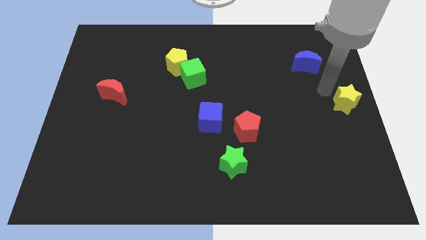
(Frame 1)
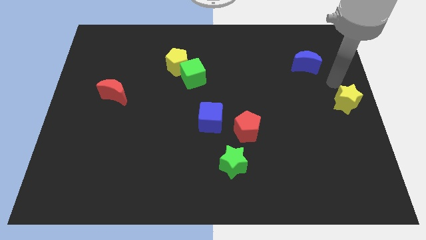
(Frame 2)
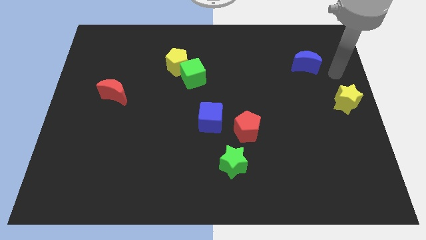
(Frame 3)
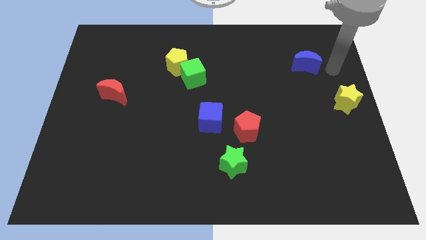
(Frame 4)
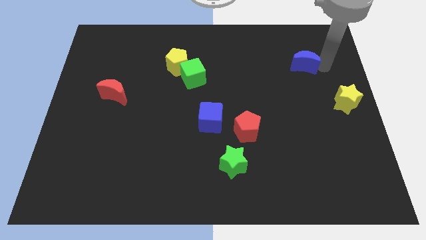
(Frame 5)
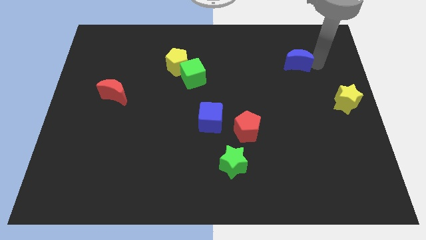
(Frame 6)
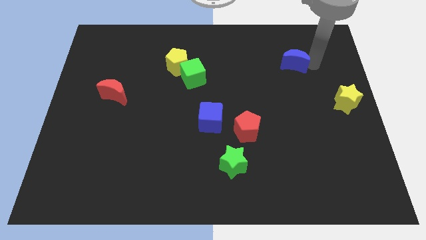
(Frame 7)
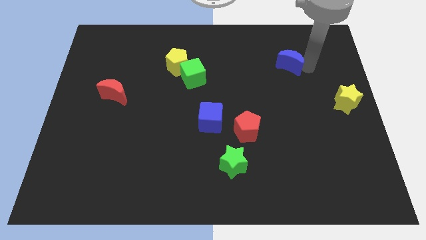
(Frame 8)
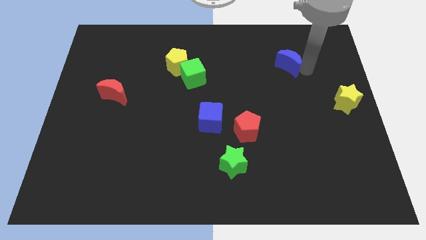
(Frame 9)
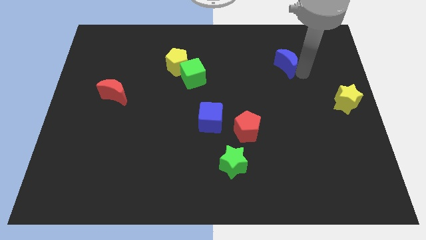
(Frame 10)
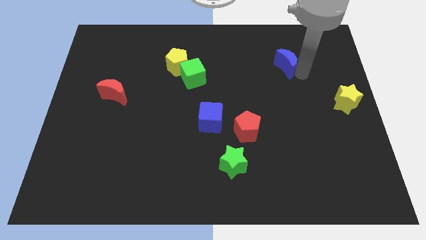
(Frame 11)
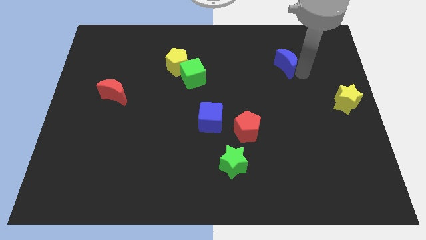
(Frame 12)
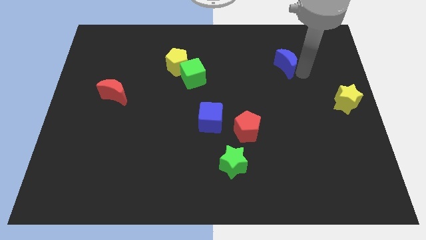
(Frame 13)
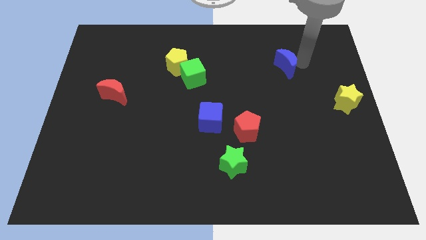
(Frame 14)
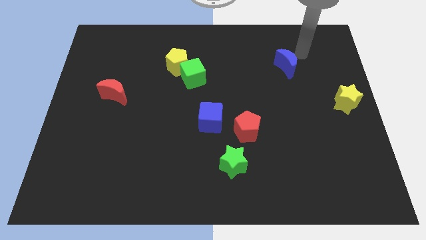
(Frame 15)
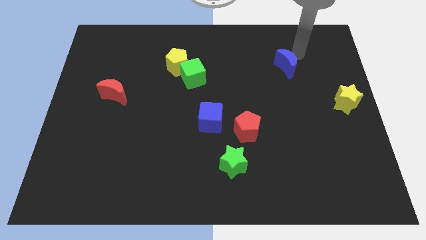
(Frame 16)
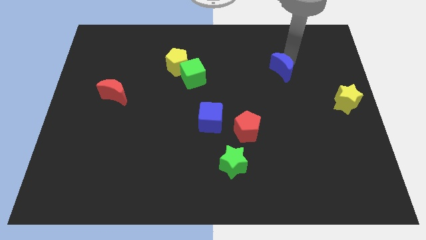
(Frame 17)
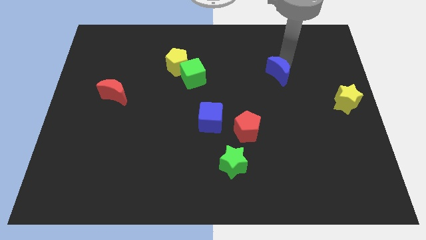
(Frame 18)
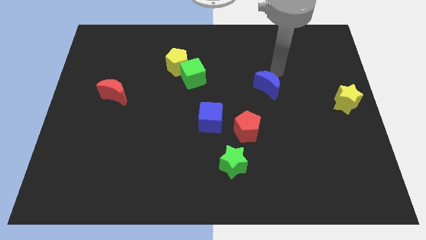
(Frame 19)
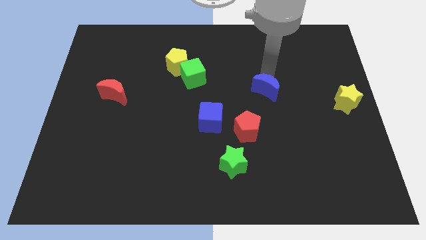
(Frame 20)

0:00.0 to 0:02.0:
push the blue moon towards the center of the board

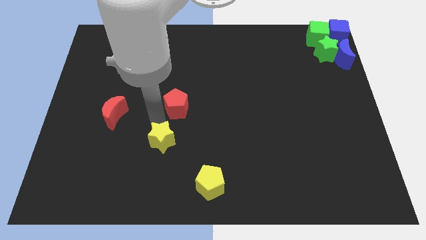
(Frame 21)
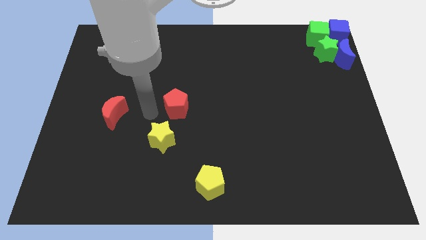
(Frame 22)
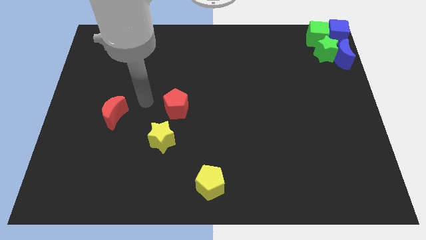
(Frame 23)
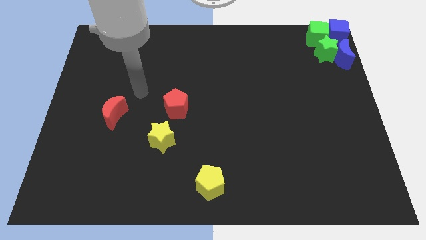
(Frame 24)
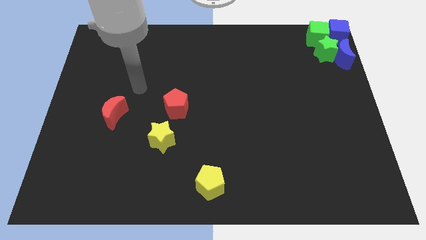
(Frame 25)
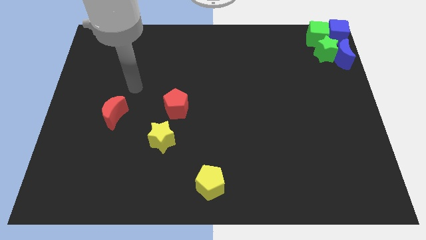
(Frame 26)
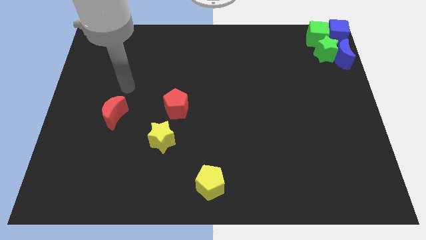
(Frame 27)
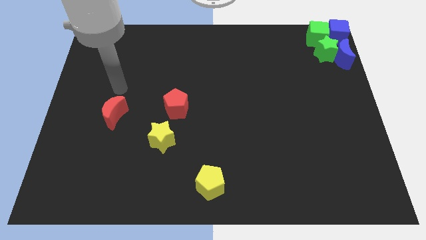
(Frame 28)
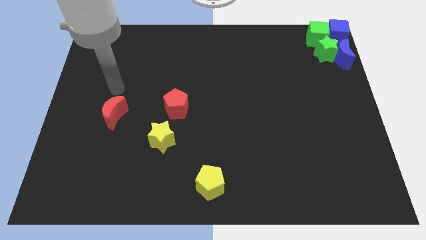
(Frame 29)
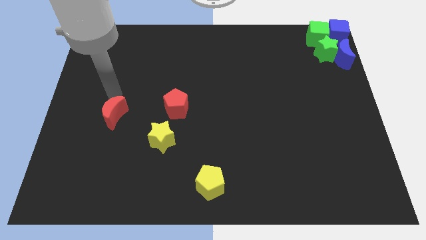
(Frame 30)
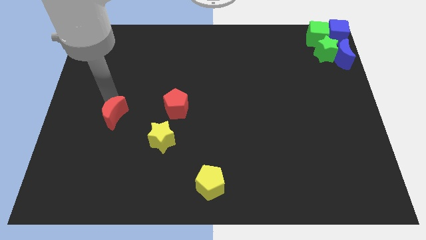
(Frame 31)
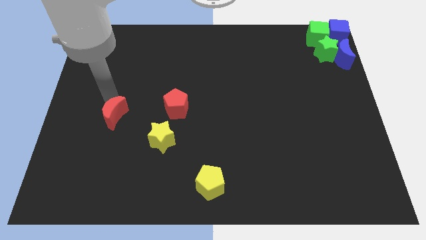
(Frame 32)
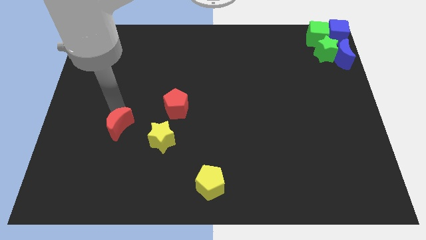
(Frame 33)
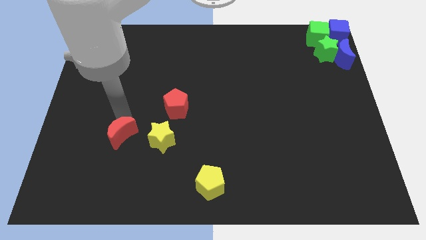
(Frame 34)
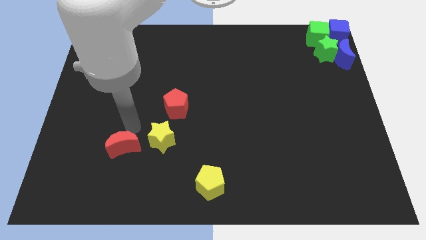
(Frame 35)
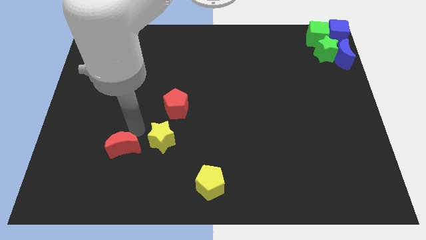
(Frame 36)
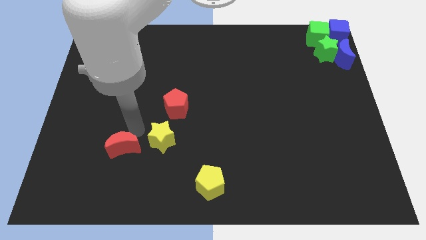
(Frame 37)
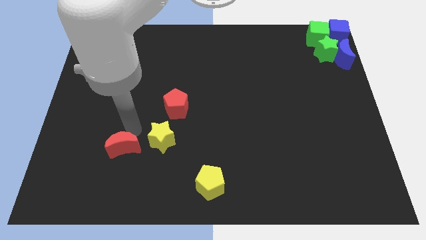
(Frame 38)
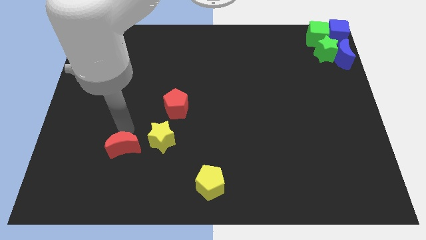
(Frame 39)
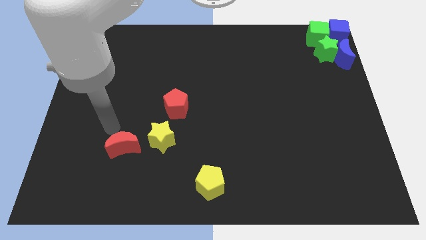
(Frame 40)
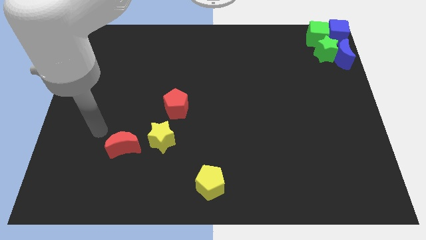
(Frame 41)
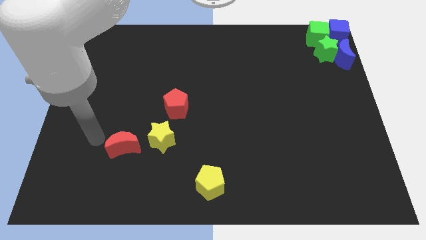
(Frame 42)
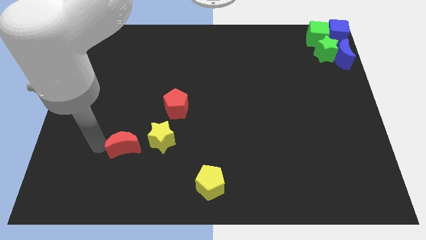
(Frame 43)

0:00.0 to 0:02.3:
move the red crescent to the left of the yellow star

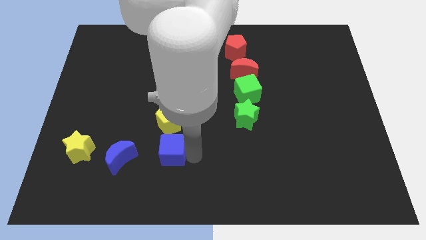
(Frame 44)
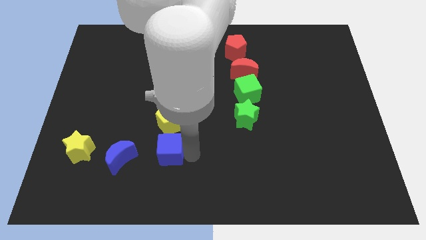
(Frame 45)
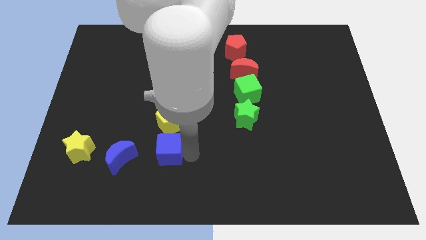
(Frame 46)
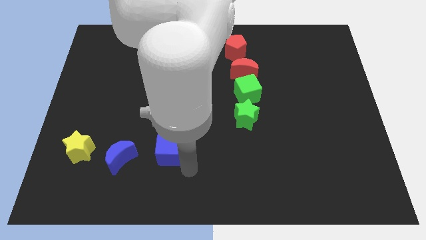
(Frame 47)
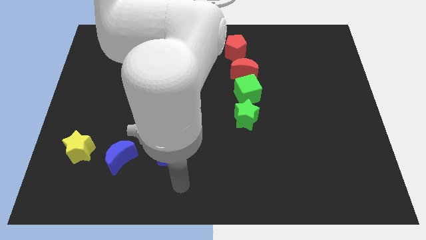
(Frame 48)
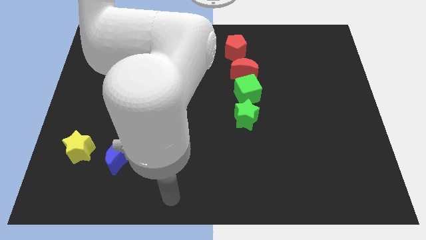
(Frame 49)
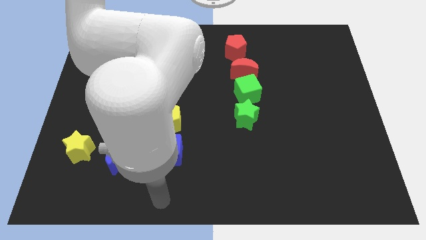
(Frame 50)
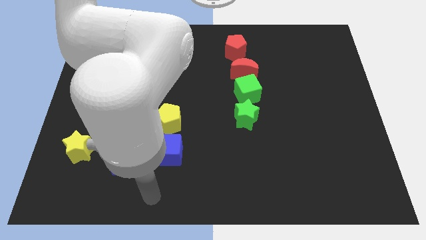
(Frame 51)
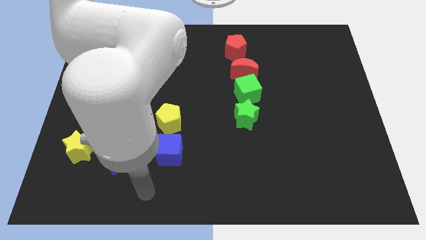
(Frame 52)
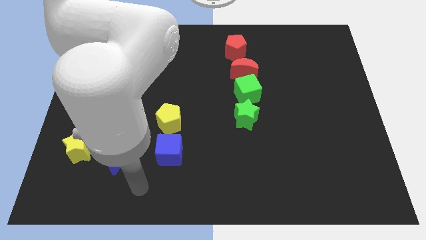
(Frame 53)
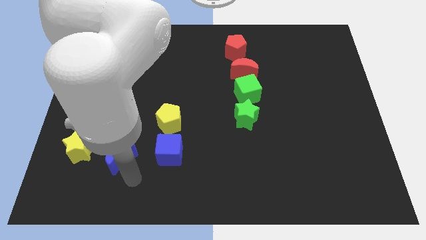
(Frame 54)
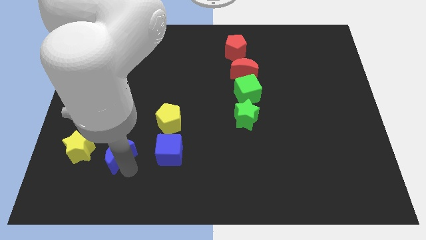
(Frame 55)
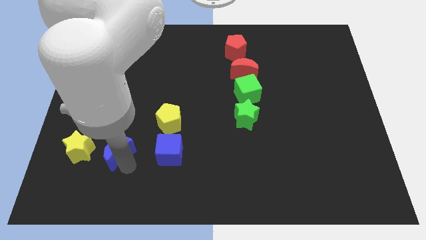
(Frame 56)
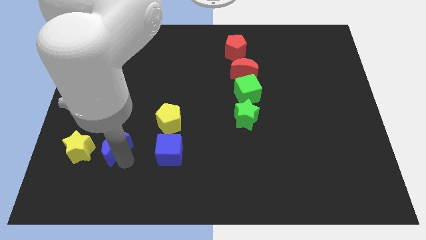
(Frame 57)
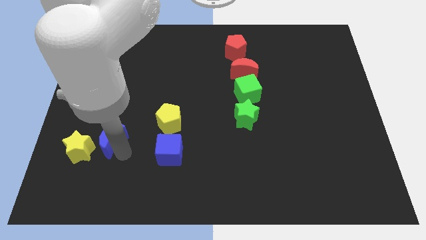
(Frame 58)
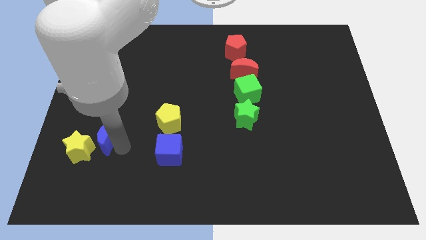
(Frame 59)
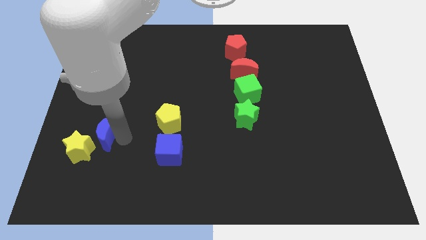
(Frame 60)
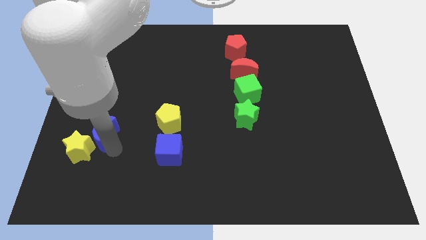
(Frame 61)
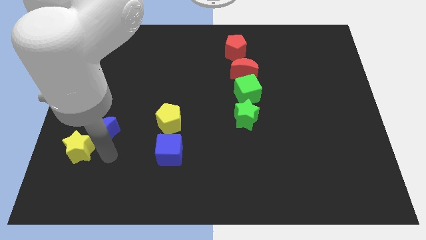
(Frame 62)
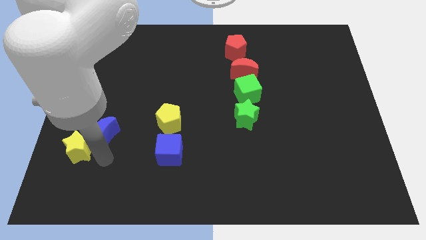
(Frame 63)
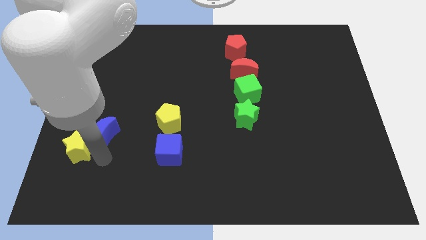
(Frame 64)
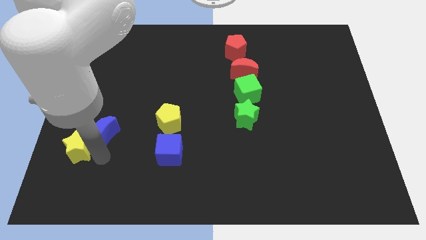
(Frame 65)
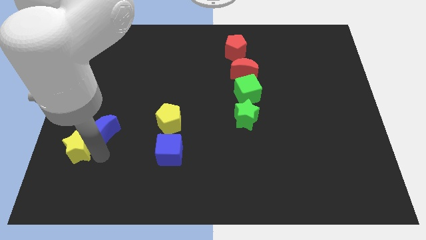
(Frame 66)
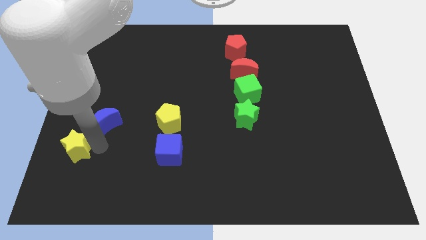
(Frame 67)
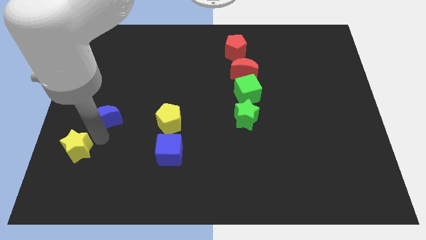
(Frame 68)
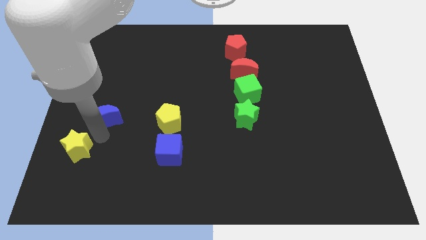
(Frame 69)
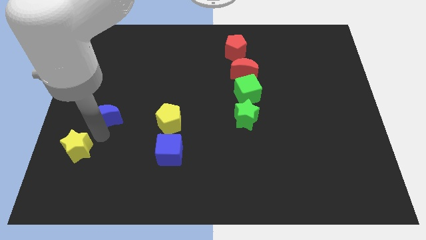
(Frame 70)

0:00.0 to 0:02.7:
put the blue moon to the right of the yellow star

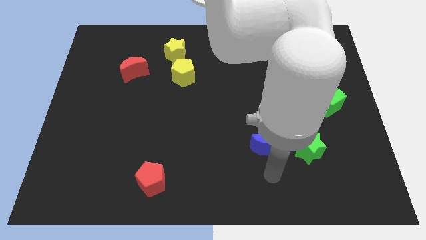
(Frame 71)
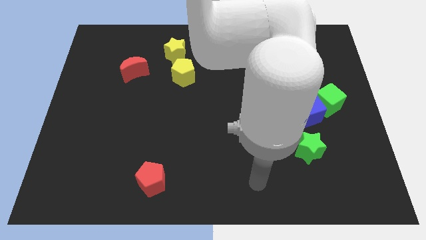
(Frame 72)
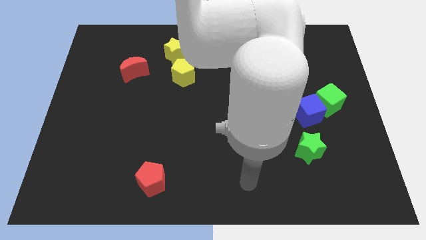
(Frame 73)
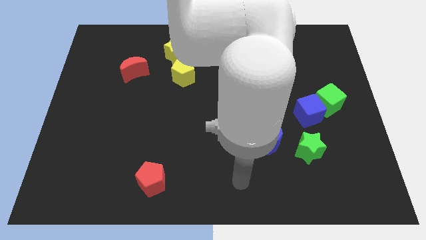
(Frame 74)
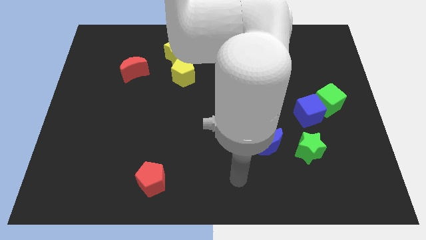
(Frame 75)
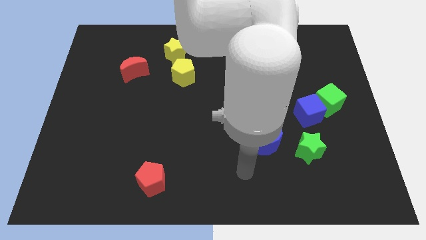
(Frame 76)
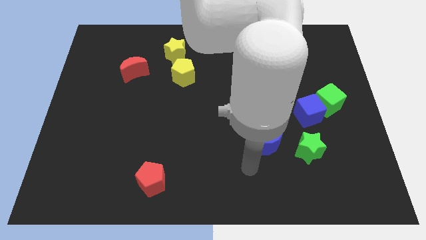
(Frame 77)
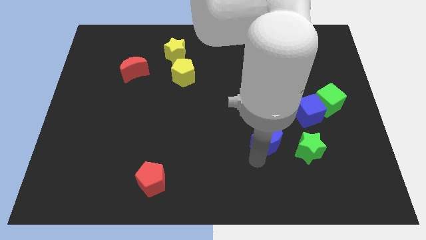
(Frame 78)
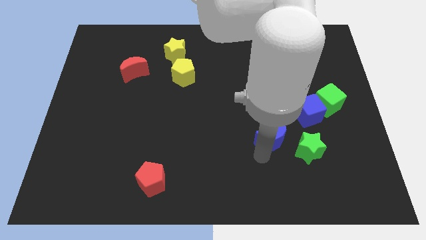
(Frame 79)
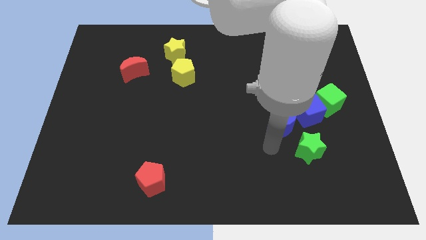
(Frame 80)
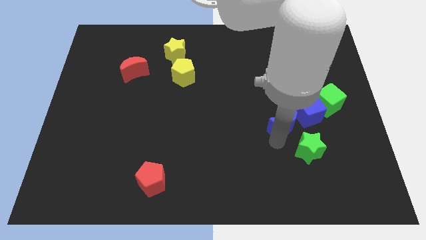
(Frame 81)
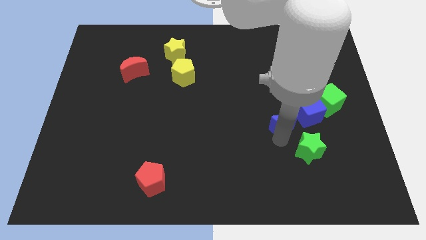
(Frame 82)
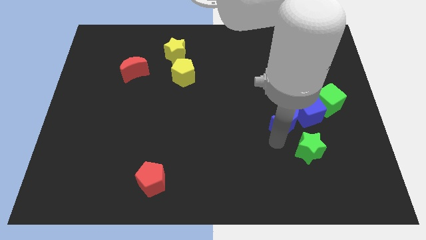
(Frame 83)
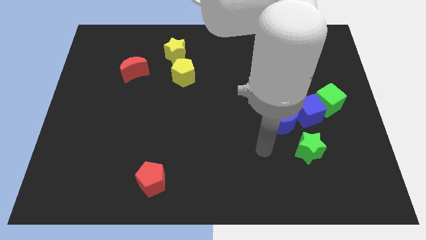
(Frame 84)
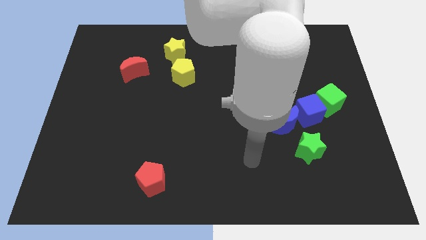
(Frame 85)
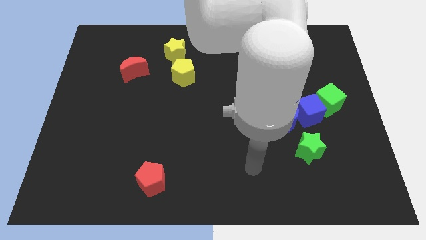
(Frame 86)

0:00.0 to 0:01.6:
push the blue moon to the left side of the blue cube

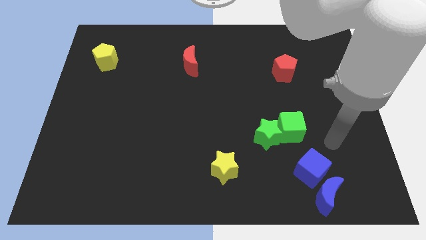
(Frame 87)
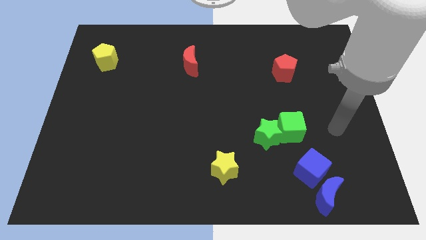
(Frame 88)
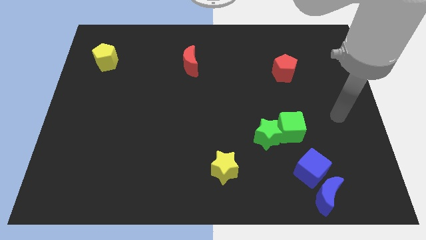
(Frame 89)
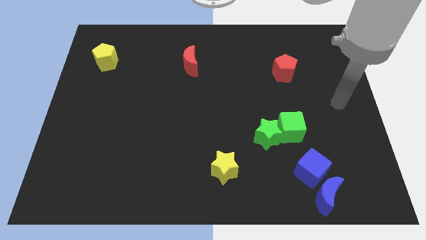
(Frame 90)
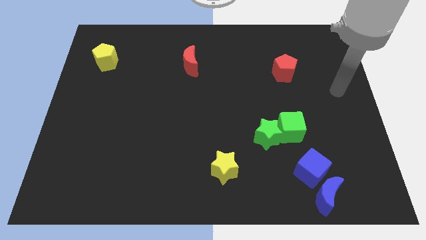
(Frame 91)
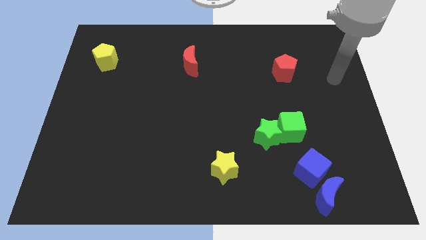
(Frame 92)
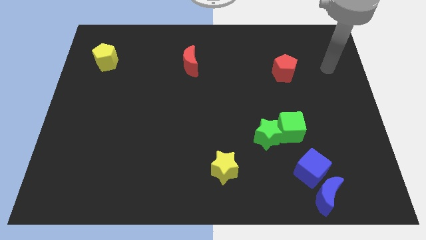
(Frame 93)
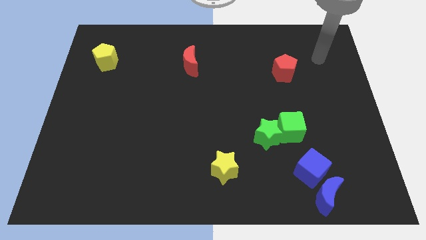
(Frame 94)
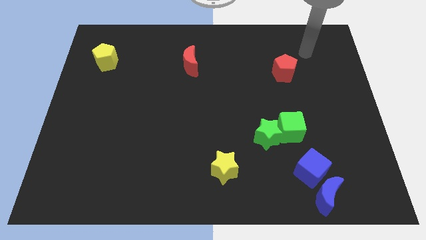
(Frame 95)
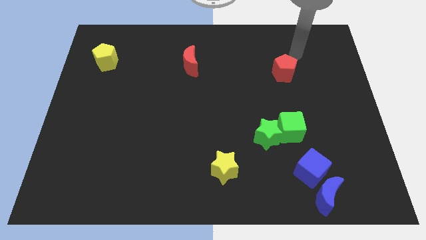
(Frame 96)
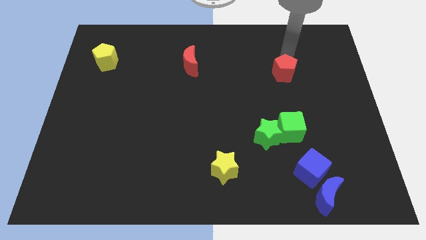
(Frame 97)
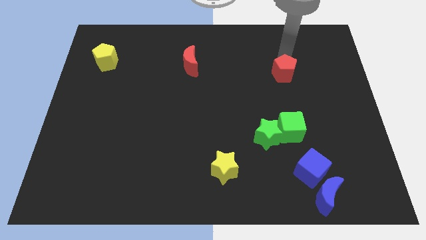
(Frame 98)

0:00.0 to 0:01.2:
point your hand above the red pentagon
